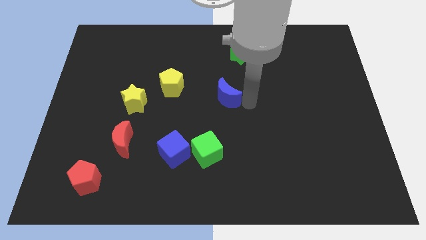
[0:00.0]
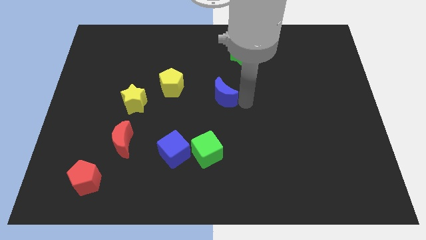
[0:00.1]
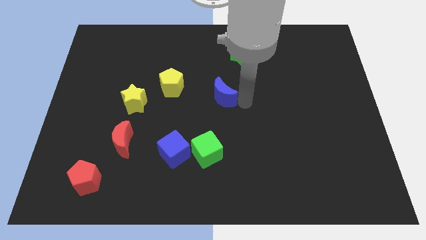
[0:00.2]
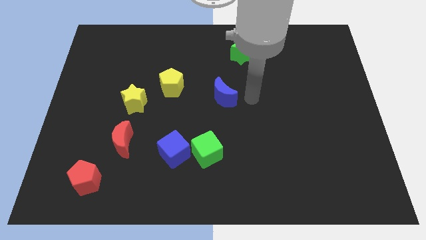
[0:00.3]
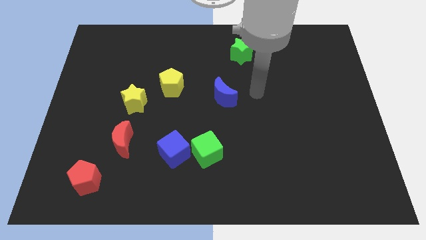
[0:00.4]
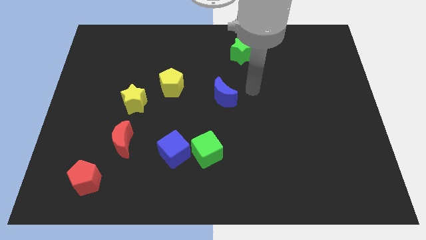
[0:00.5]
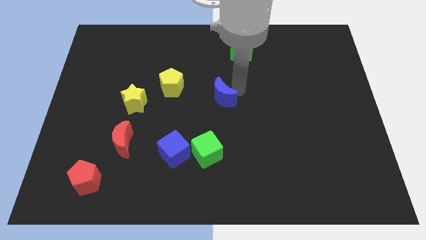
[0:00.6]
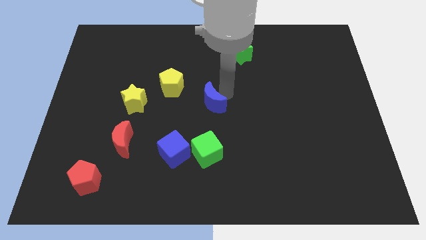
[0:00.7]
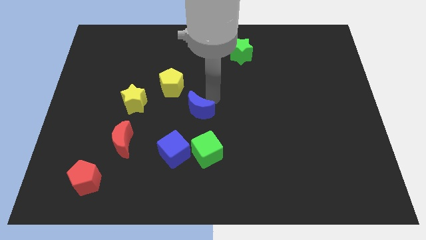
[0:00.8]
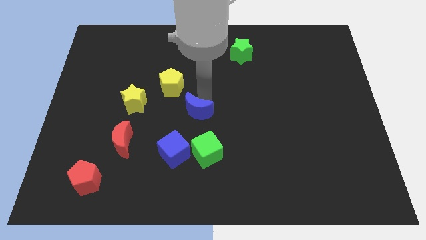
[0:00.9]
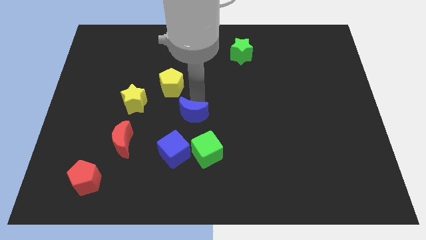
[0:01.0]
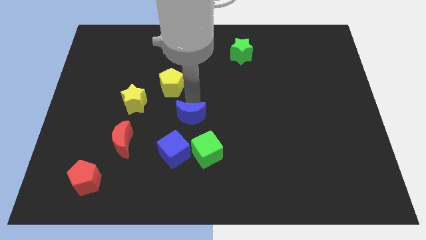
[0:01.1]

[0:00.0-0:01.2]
move the blue moon diagonally to the bottom left of the green star

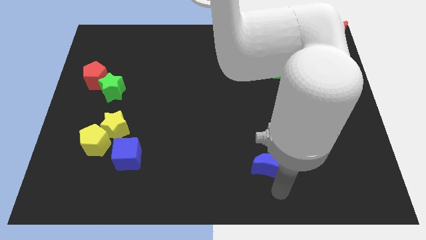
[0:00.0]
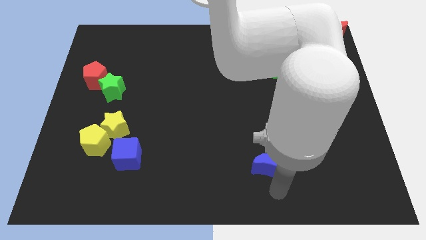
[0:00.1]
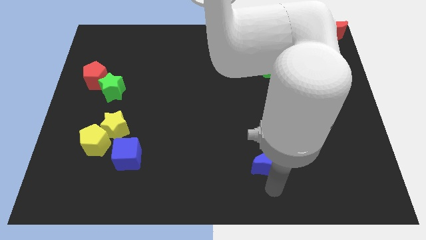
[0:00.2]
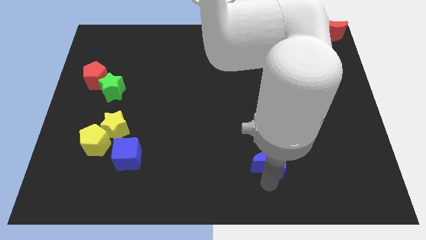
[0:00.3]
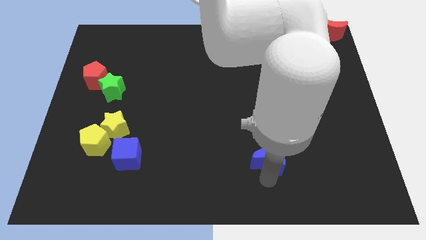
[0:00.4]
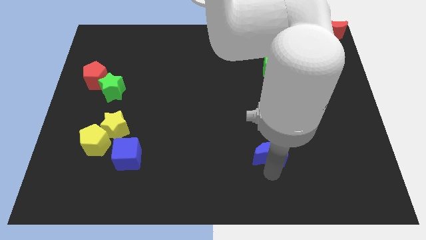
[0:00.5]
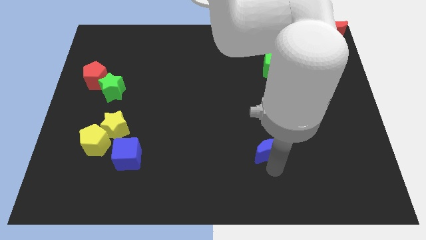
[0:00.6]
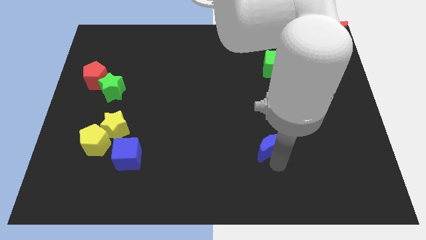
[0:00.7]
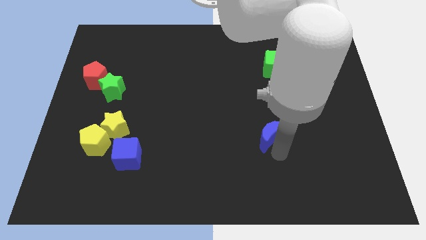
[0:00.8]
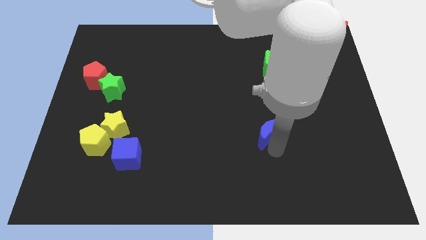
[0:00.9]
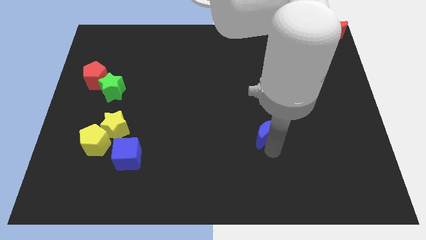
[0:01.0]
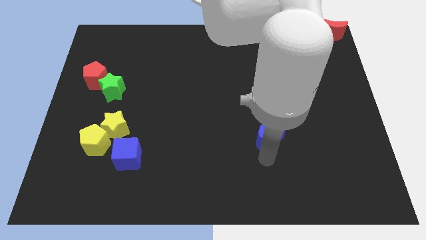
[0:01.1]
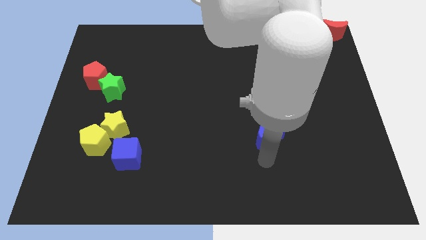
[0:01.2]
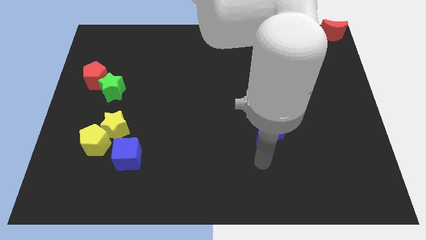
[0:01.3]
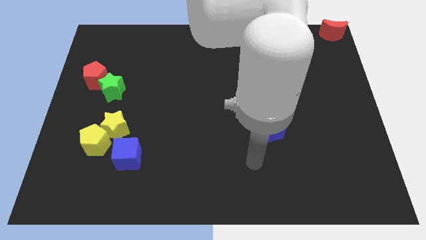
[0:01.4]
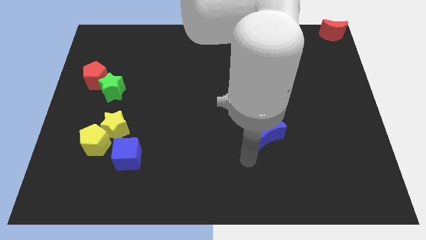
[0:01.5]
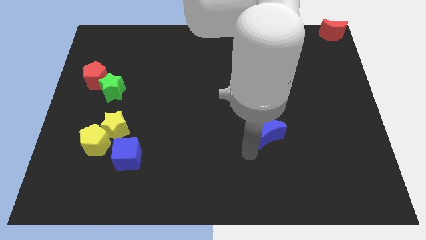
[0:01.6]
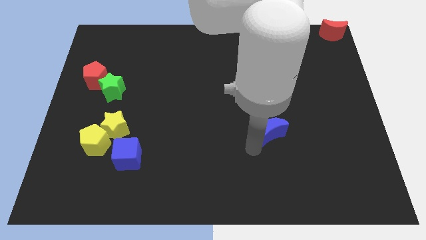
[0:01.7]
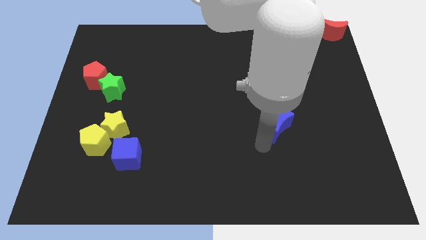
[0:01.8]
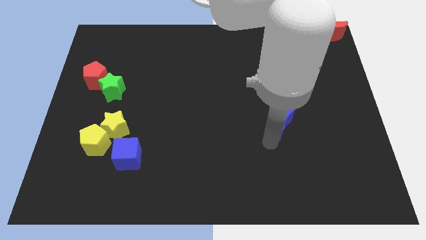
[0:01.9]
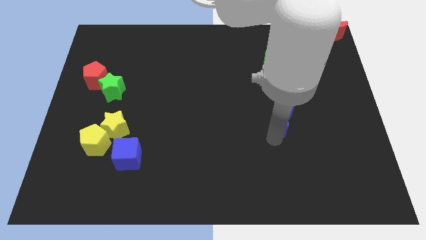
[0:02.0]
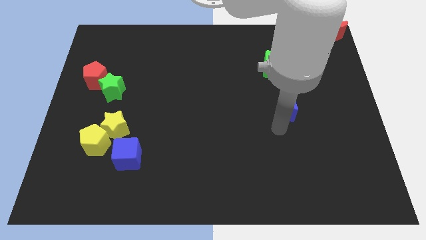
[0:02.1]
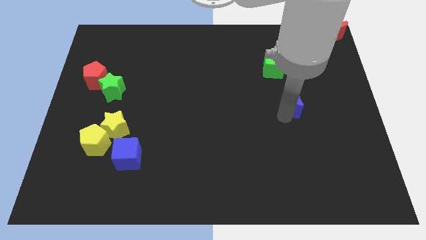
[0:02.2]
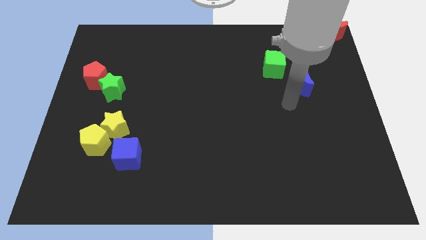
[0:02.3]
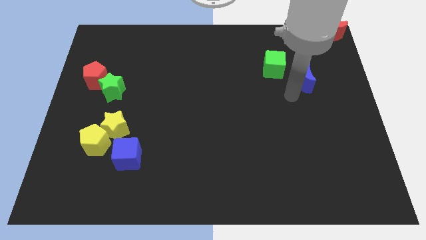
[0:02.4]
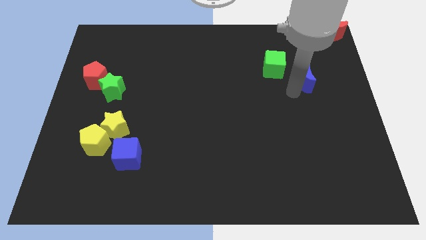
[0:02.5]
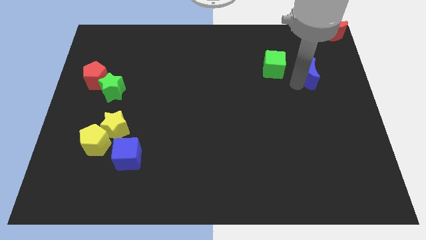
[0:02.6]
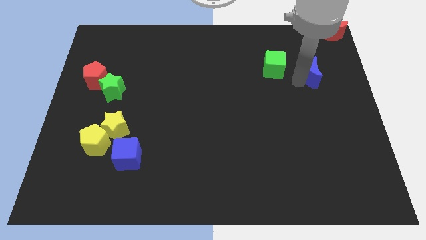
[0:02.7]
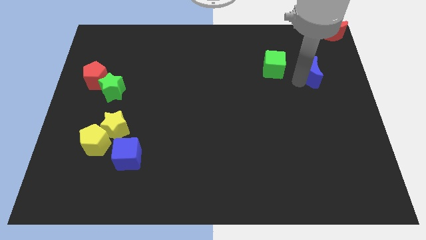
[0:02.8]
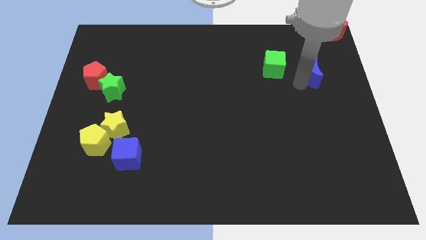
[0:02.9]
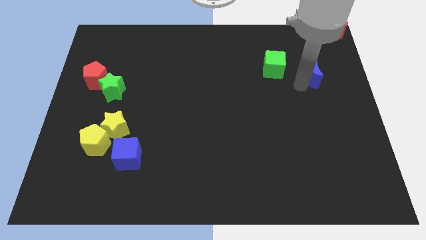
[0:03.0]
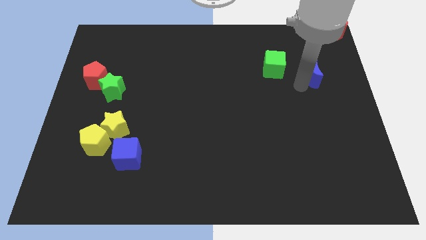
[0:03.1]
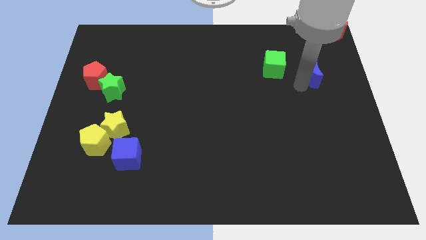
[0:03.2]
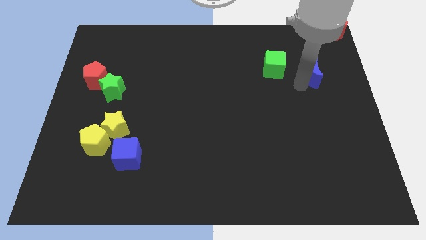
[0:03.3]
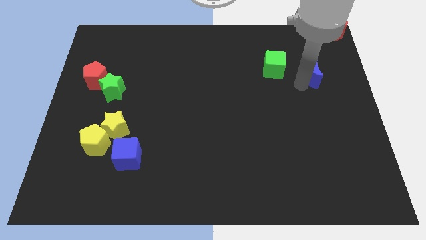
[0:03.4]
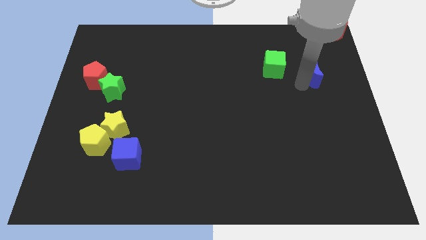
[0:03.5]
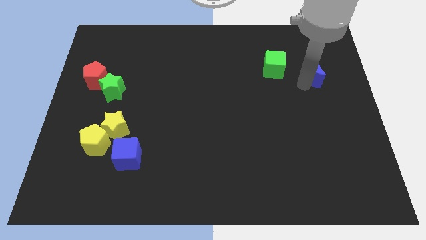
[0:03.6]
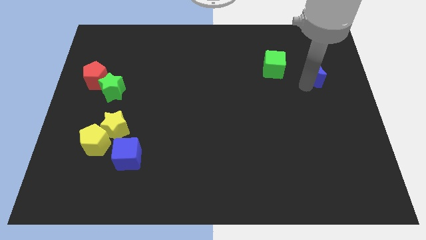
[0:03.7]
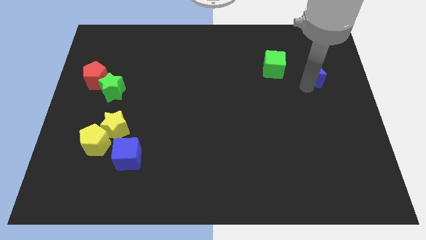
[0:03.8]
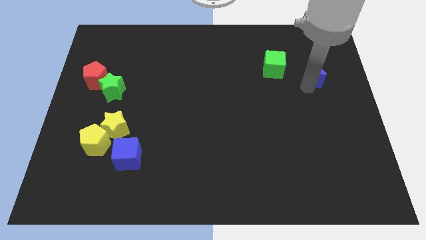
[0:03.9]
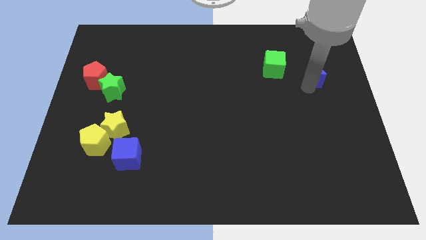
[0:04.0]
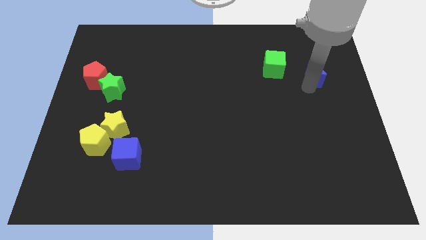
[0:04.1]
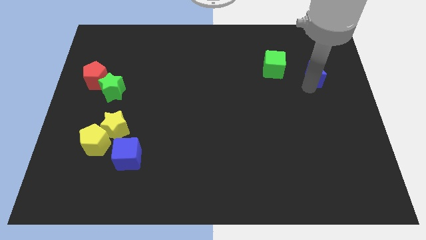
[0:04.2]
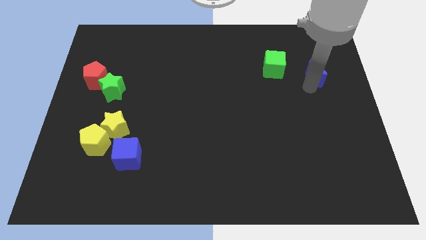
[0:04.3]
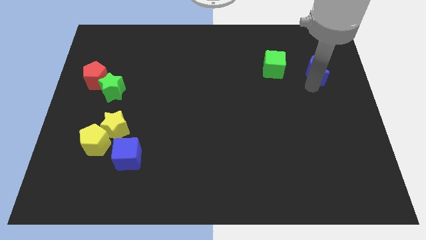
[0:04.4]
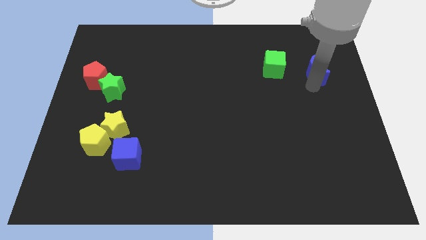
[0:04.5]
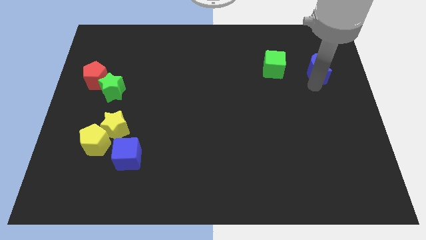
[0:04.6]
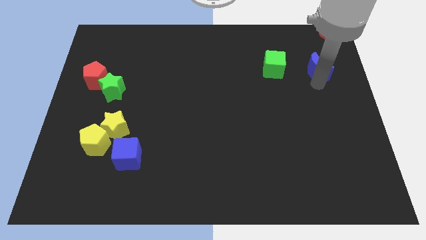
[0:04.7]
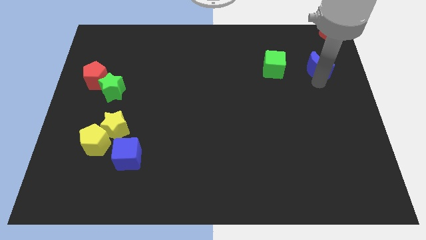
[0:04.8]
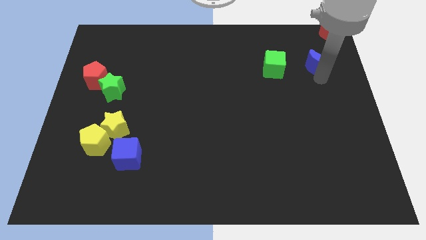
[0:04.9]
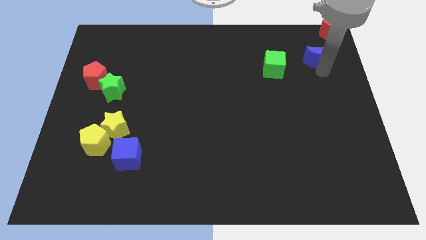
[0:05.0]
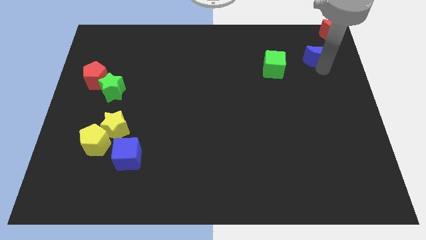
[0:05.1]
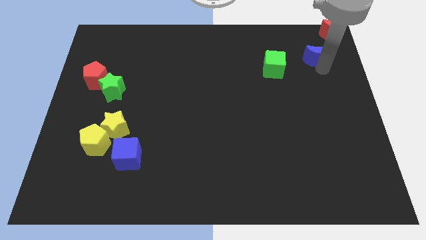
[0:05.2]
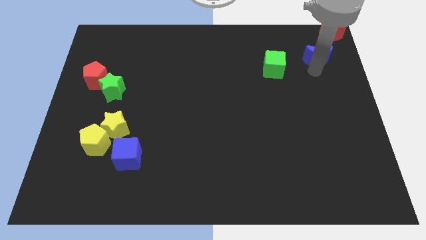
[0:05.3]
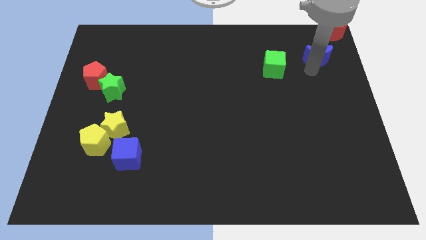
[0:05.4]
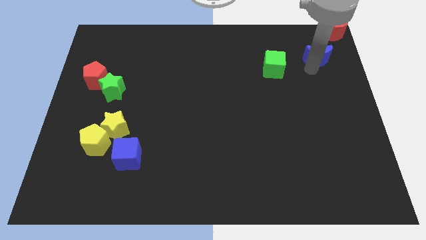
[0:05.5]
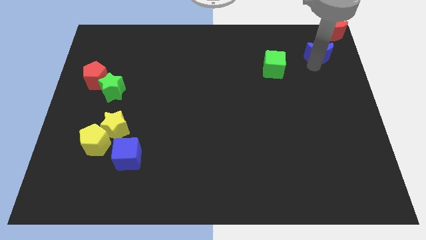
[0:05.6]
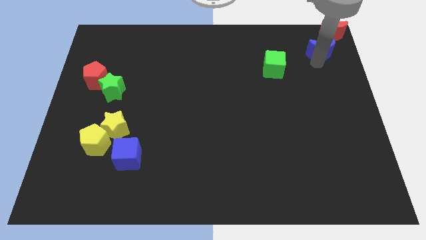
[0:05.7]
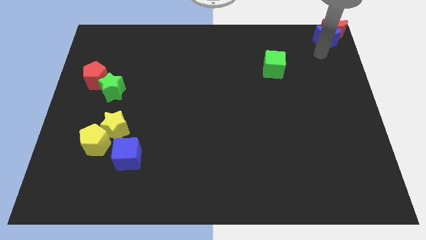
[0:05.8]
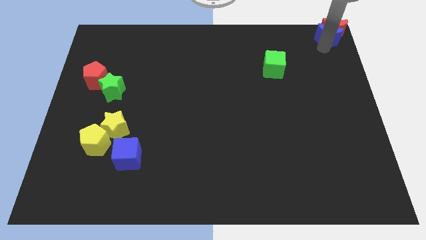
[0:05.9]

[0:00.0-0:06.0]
push the blue crescent under the red crescent top left corner of the board

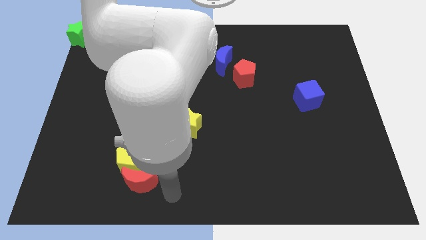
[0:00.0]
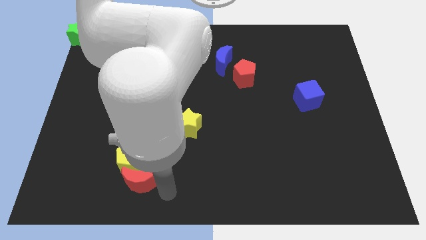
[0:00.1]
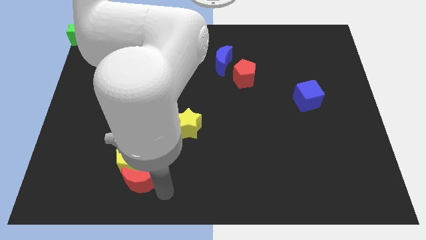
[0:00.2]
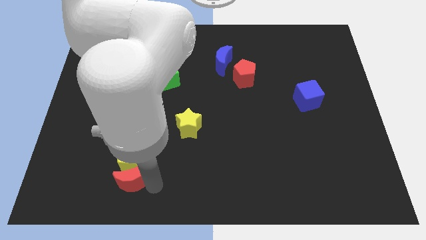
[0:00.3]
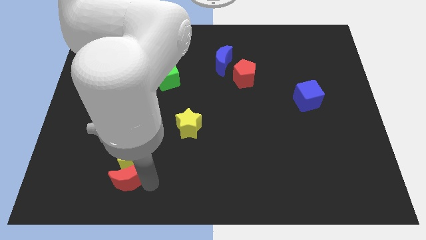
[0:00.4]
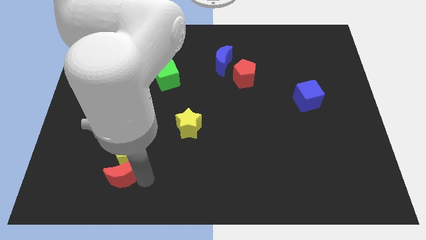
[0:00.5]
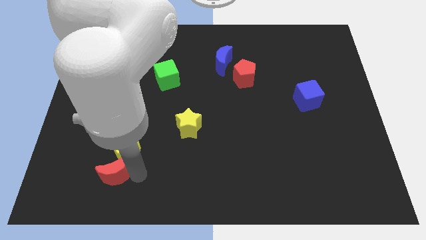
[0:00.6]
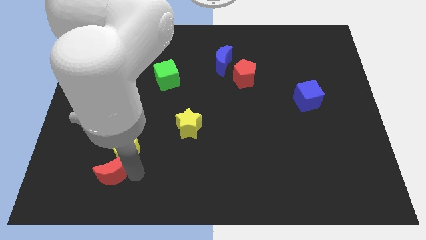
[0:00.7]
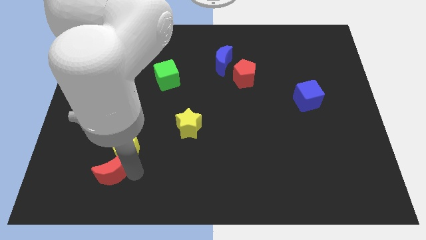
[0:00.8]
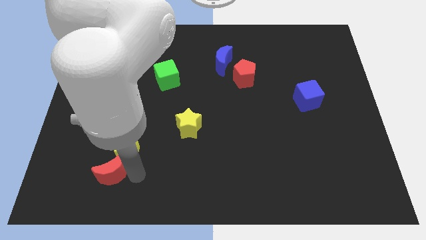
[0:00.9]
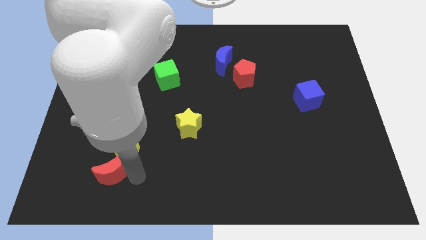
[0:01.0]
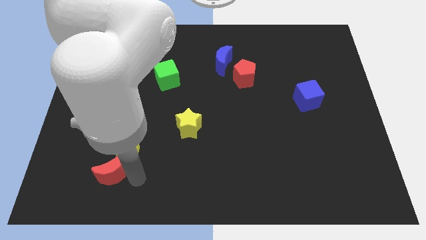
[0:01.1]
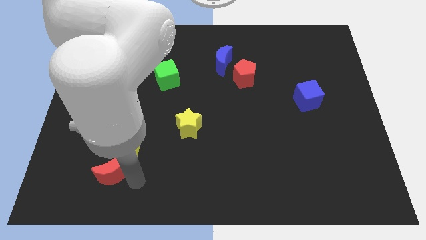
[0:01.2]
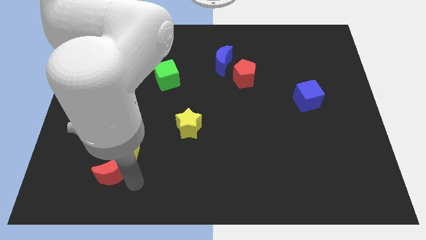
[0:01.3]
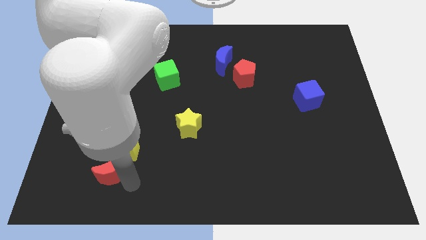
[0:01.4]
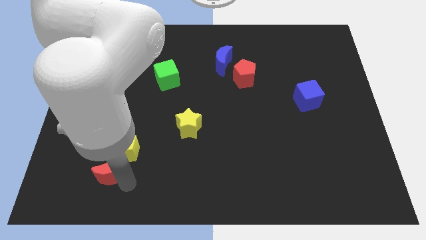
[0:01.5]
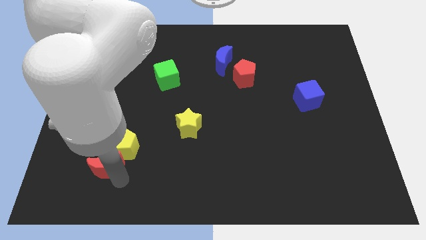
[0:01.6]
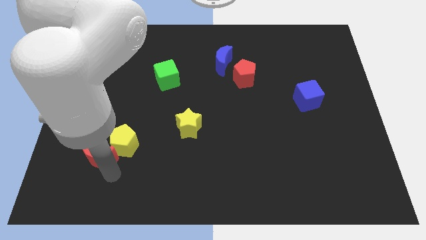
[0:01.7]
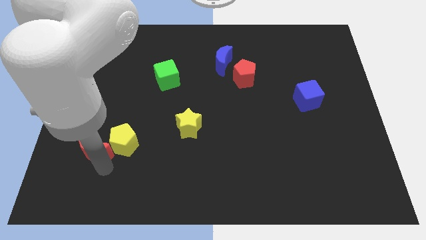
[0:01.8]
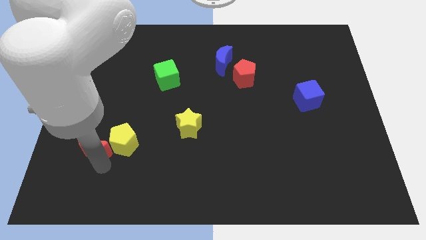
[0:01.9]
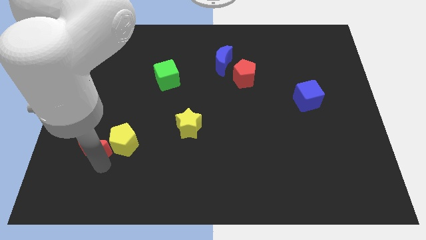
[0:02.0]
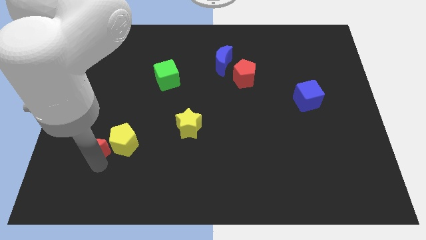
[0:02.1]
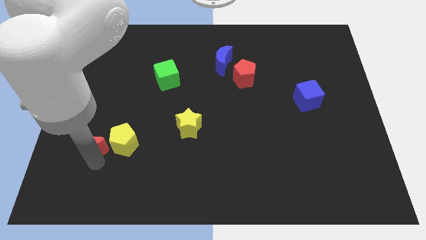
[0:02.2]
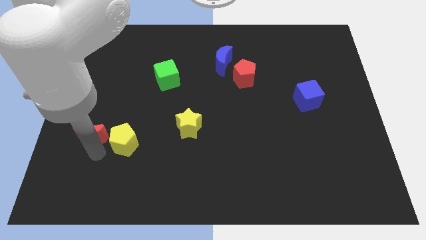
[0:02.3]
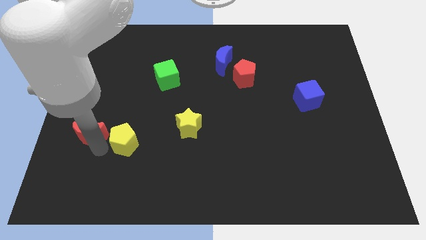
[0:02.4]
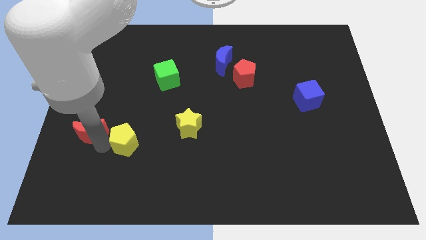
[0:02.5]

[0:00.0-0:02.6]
move the red moon to the left of the yellow pentagon
